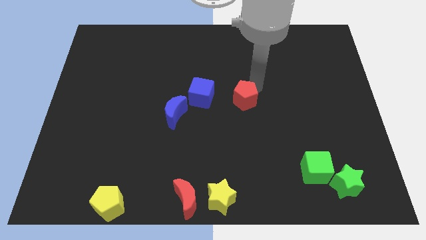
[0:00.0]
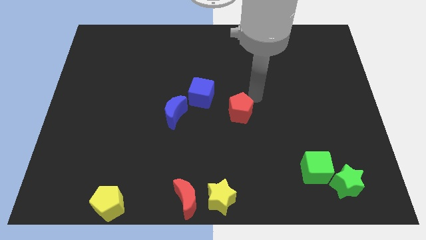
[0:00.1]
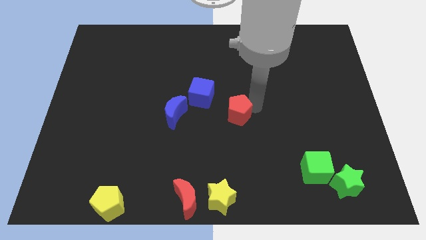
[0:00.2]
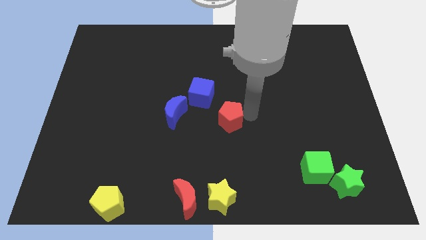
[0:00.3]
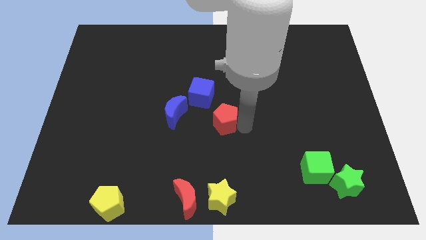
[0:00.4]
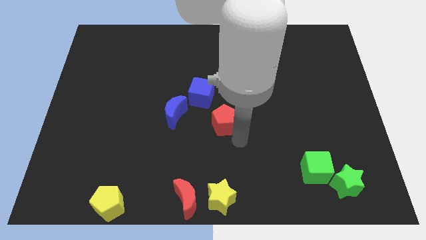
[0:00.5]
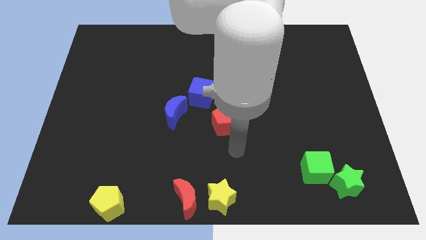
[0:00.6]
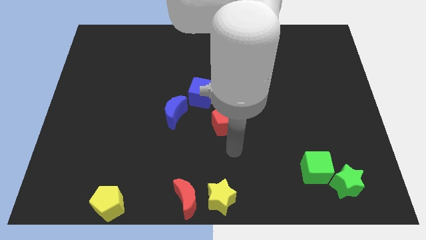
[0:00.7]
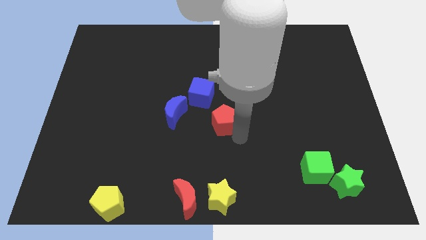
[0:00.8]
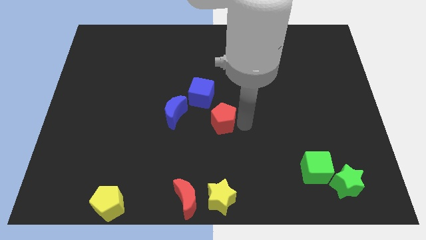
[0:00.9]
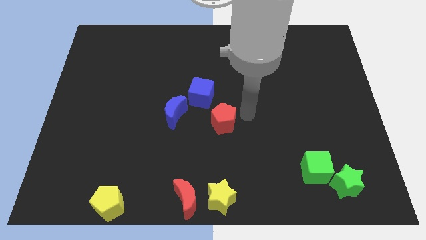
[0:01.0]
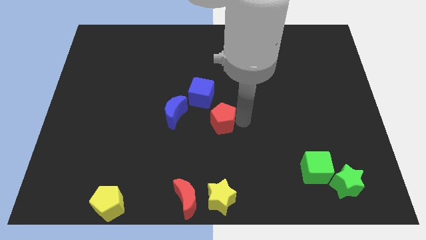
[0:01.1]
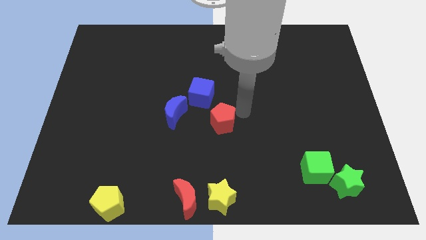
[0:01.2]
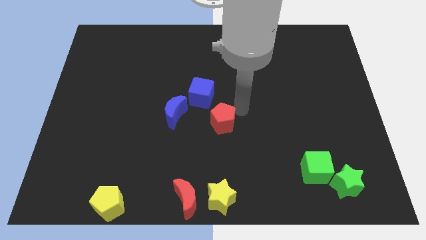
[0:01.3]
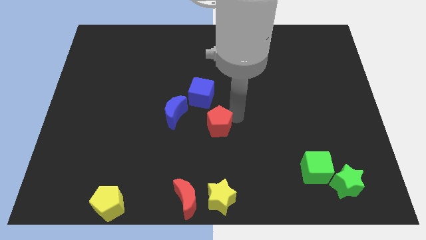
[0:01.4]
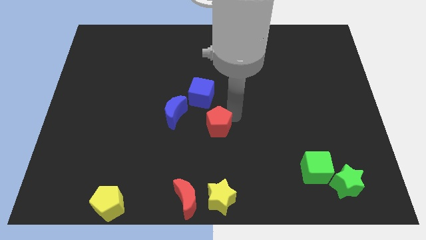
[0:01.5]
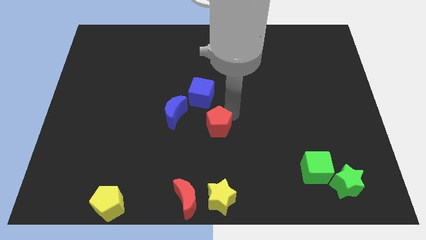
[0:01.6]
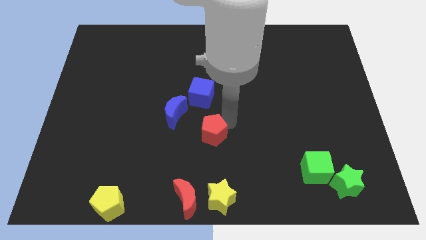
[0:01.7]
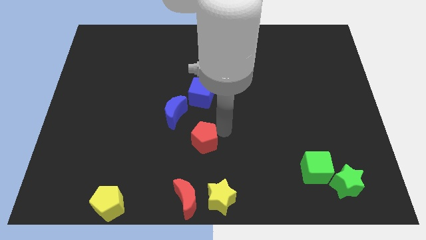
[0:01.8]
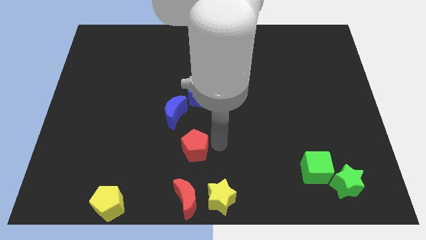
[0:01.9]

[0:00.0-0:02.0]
put the red pentagon between the blue moon and yellow star

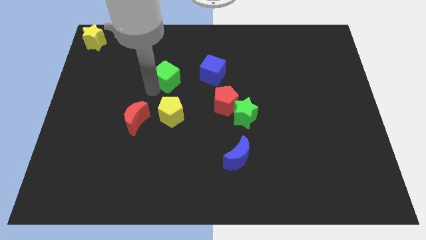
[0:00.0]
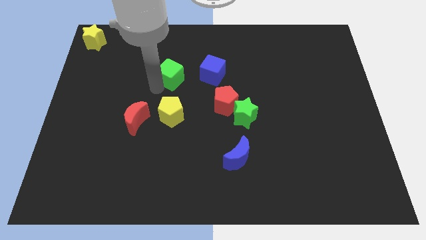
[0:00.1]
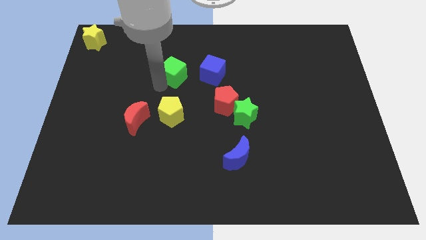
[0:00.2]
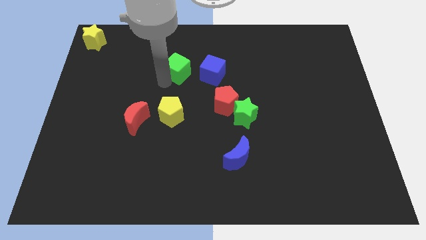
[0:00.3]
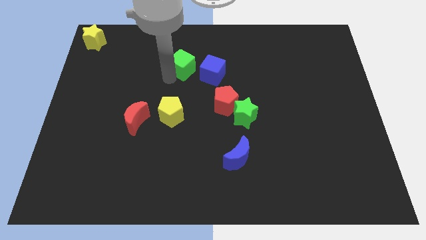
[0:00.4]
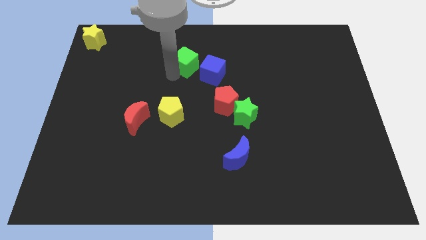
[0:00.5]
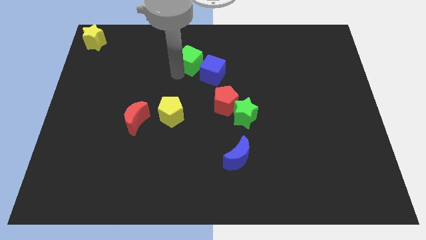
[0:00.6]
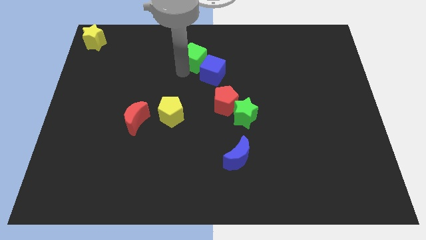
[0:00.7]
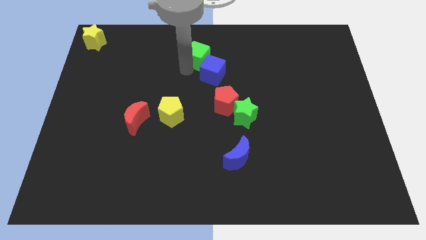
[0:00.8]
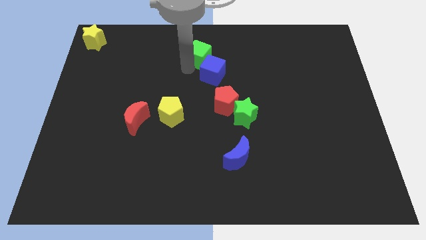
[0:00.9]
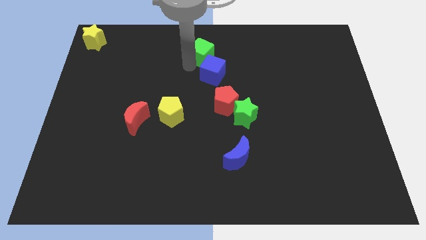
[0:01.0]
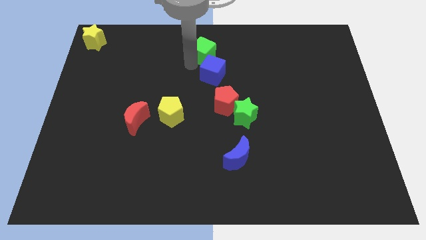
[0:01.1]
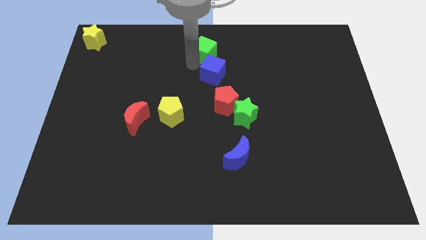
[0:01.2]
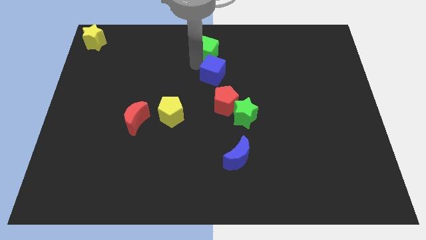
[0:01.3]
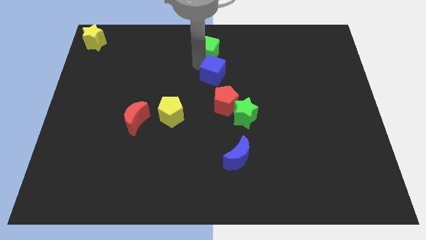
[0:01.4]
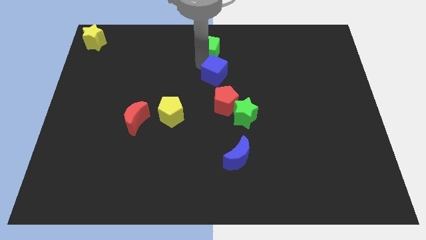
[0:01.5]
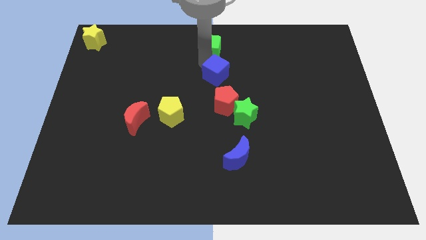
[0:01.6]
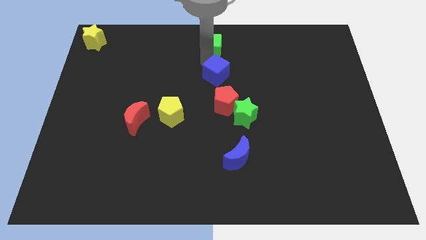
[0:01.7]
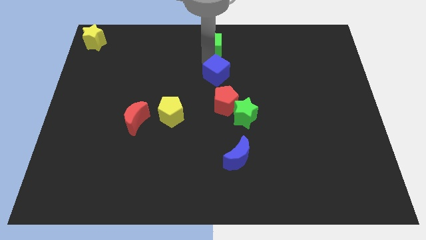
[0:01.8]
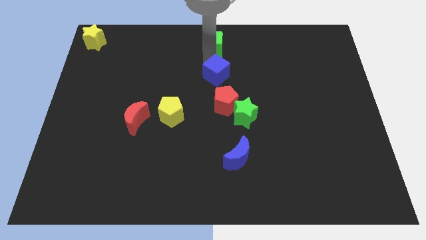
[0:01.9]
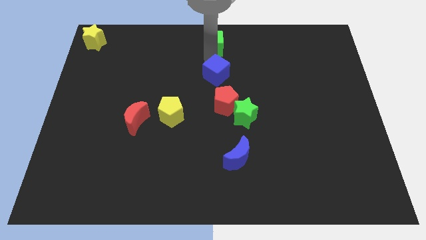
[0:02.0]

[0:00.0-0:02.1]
push the green cube above the blue cube

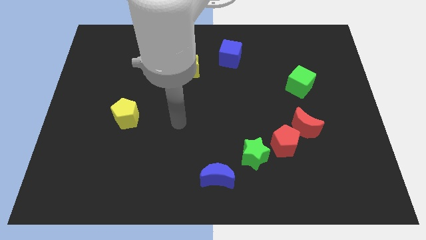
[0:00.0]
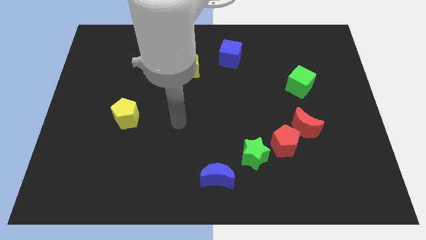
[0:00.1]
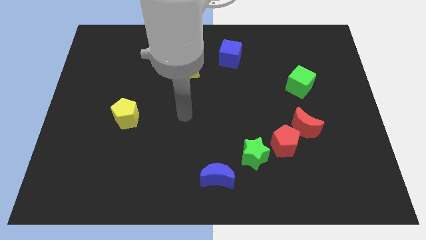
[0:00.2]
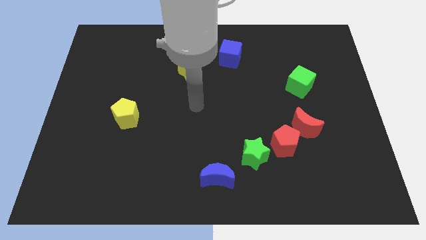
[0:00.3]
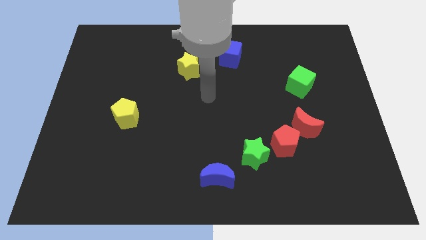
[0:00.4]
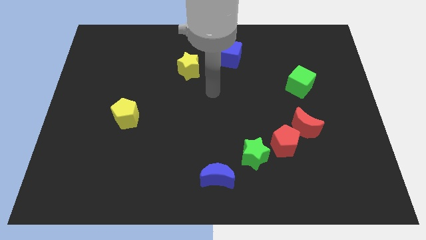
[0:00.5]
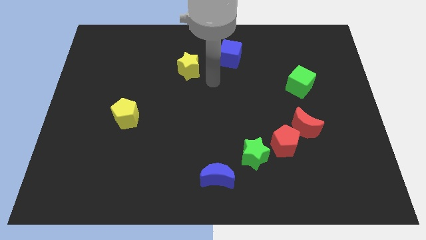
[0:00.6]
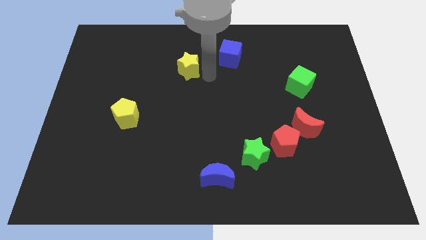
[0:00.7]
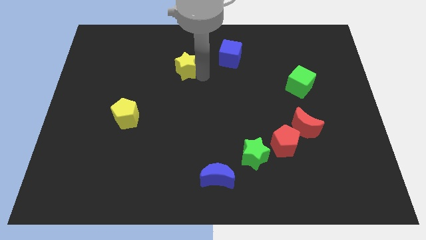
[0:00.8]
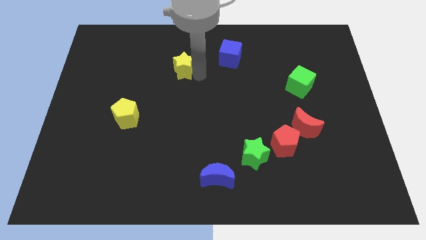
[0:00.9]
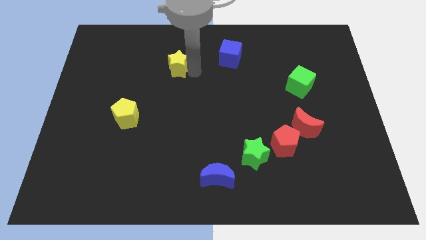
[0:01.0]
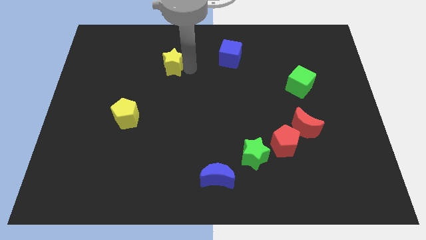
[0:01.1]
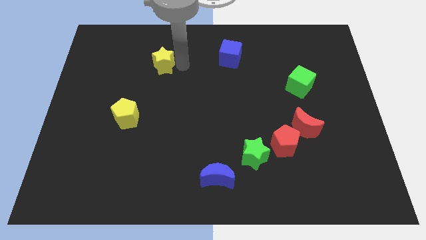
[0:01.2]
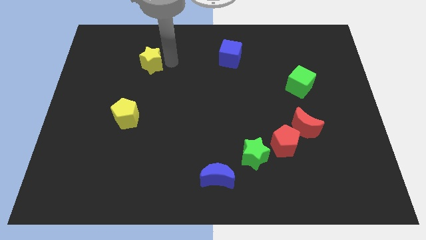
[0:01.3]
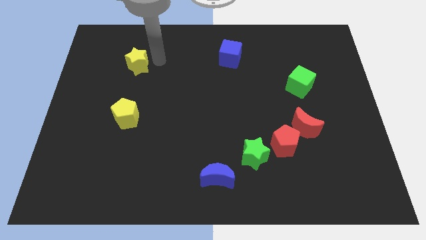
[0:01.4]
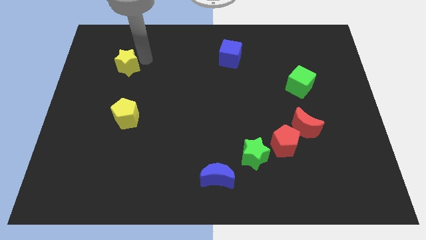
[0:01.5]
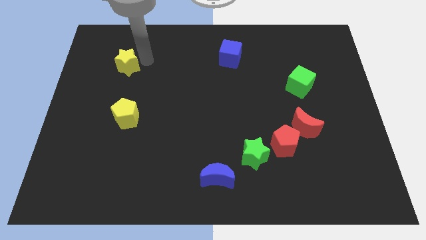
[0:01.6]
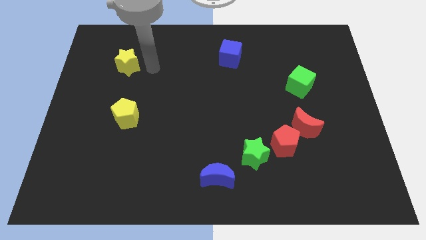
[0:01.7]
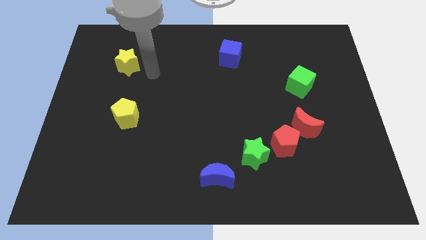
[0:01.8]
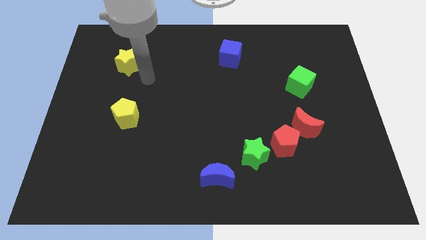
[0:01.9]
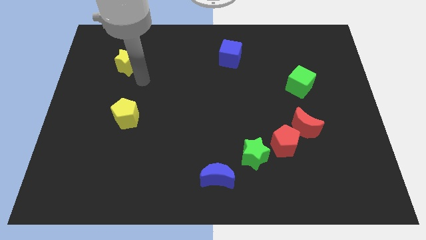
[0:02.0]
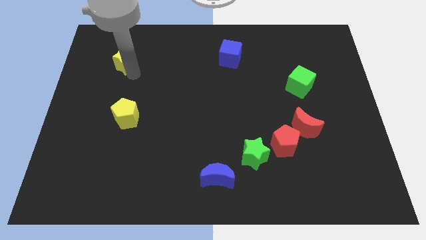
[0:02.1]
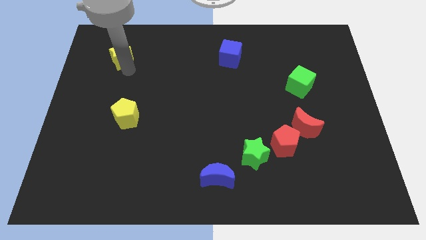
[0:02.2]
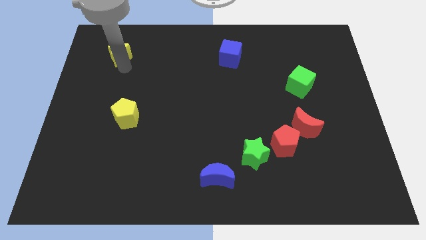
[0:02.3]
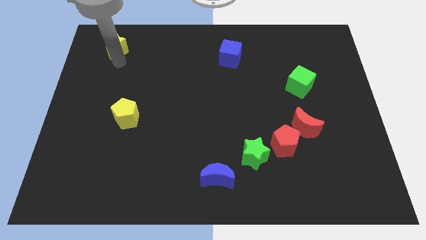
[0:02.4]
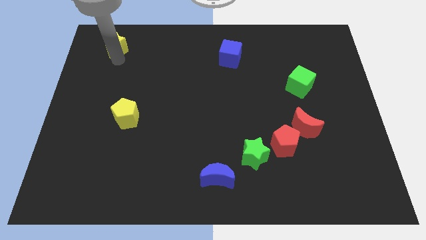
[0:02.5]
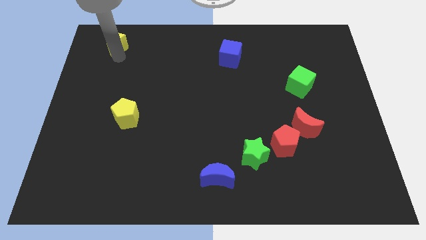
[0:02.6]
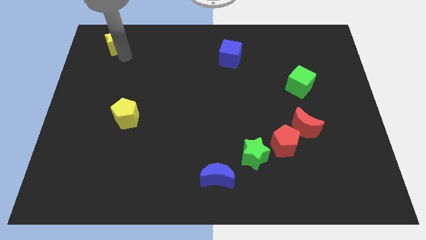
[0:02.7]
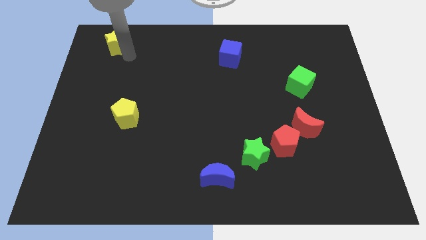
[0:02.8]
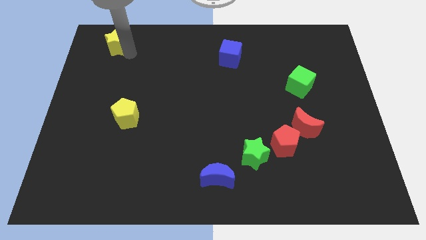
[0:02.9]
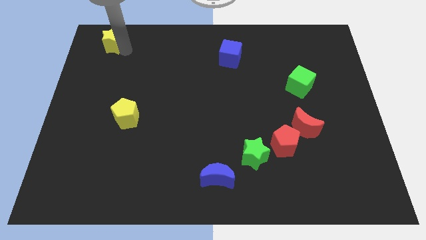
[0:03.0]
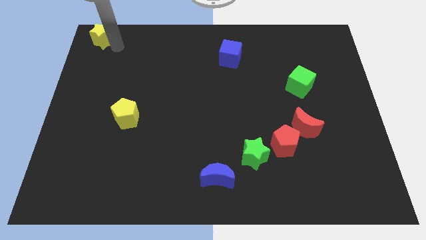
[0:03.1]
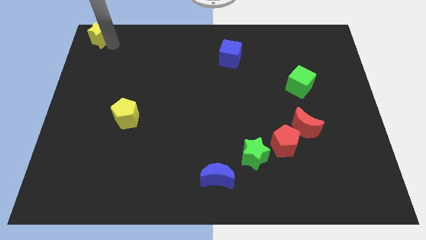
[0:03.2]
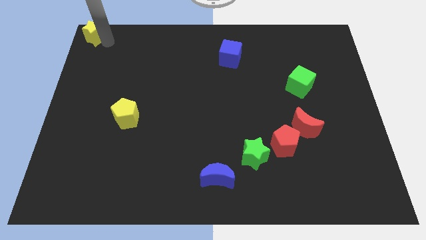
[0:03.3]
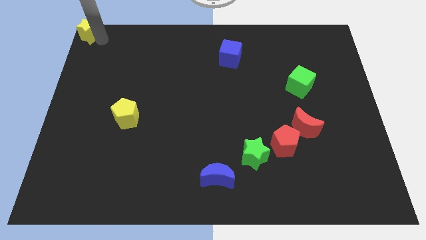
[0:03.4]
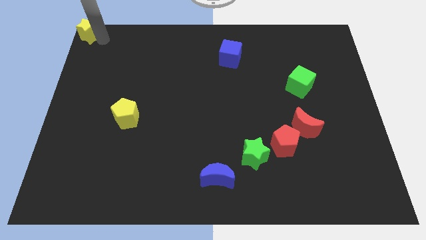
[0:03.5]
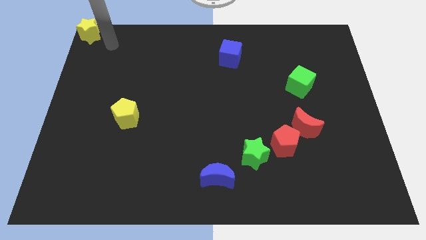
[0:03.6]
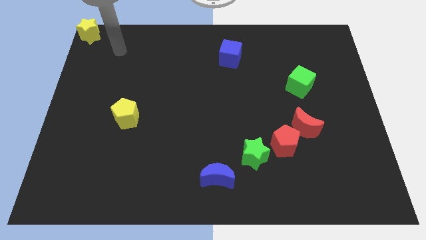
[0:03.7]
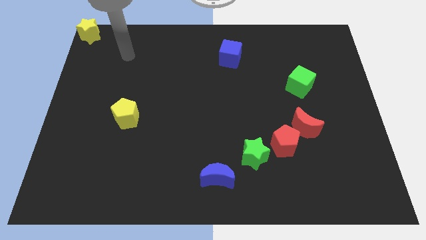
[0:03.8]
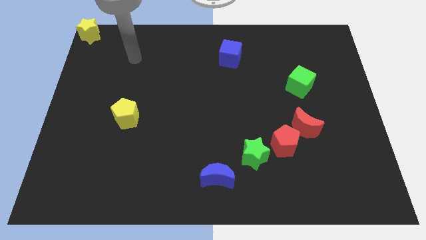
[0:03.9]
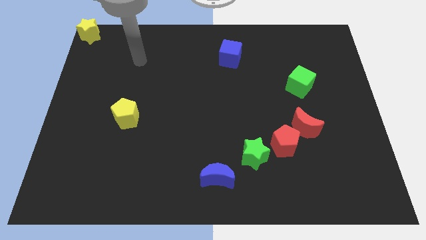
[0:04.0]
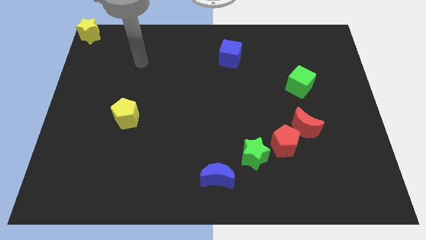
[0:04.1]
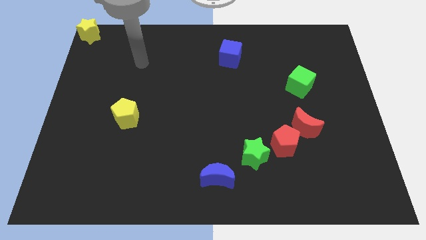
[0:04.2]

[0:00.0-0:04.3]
move the yellow star to the top left

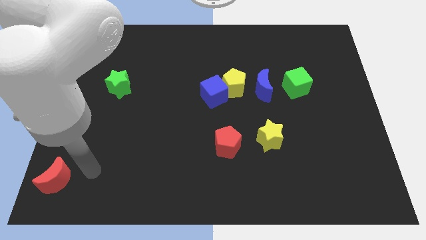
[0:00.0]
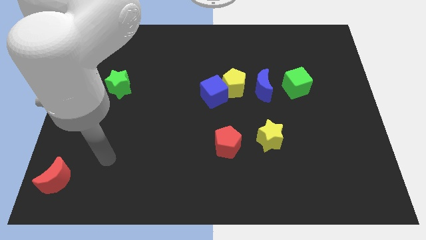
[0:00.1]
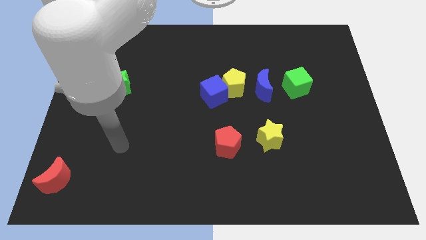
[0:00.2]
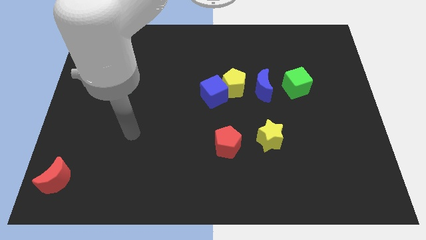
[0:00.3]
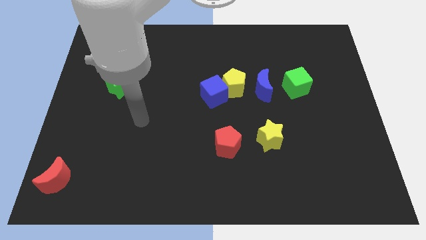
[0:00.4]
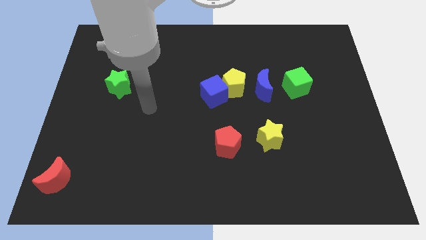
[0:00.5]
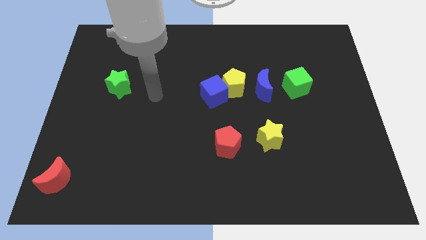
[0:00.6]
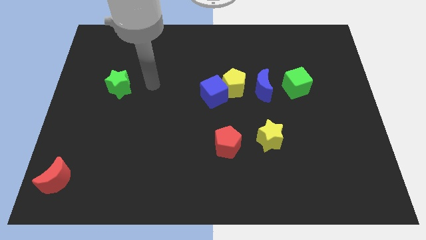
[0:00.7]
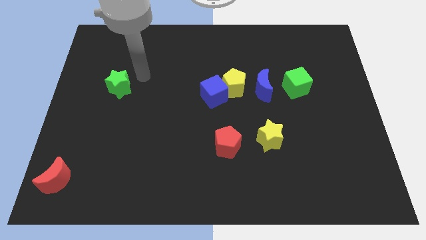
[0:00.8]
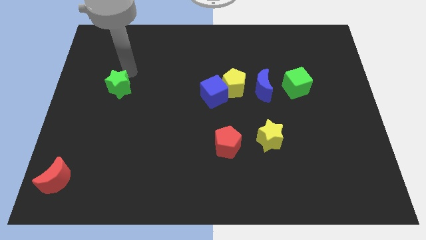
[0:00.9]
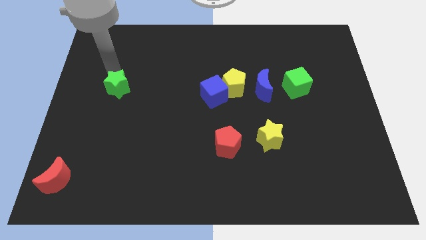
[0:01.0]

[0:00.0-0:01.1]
move arm to the top of green star
